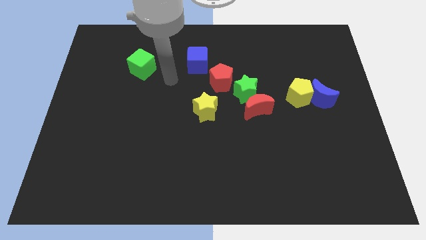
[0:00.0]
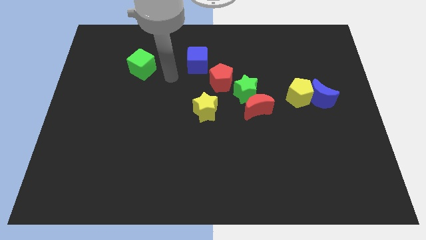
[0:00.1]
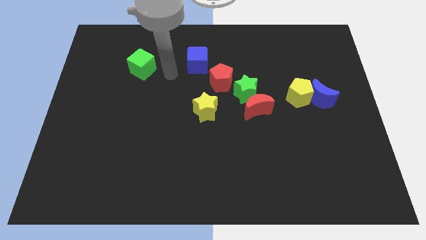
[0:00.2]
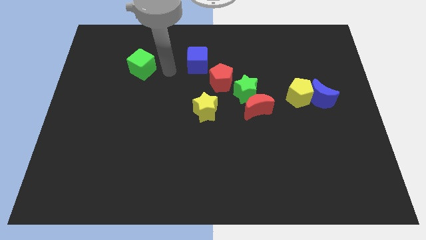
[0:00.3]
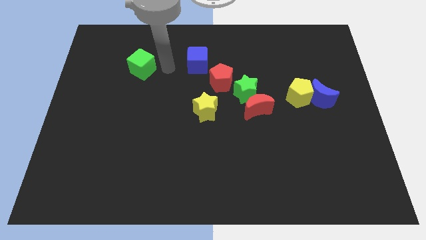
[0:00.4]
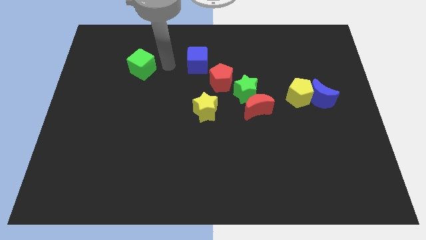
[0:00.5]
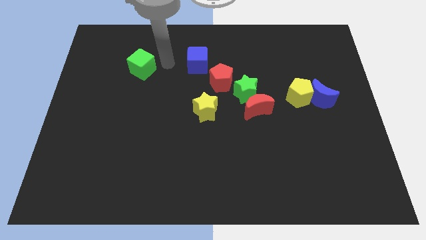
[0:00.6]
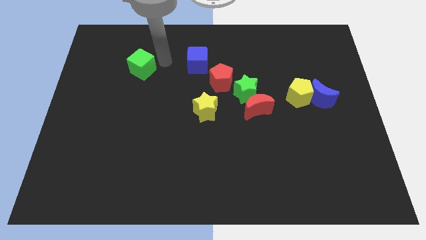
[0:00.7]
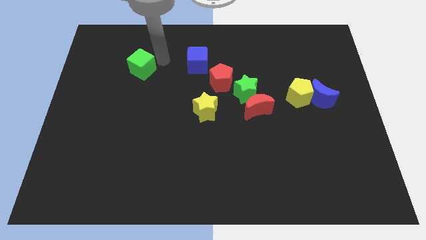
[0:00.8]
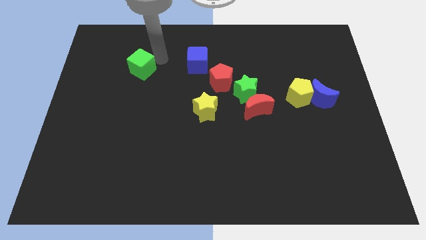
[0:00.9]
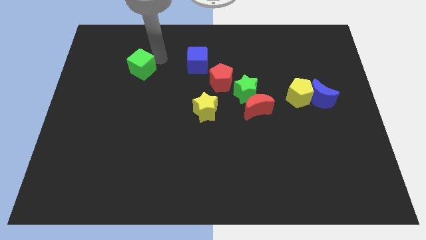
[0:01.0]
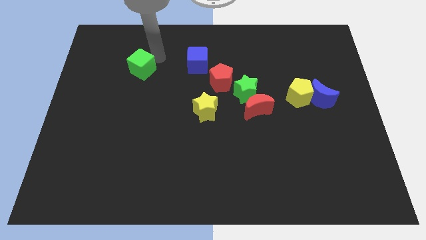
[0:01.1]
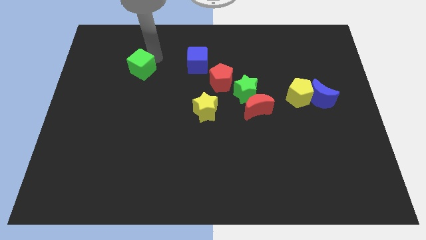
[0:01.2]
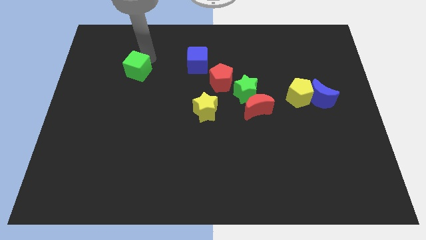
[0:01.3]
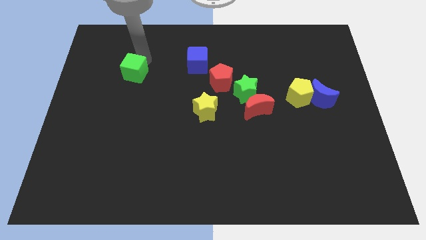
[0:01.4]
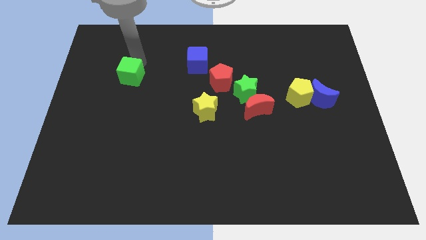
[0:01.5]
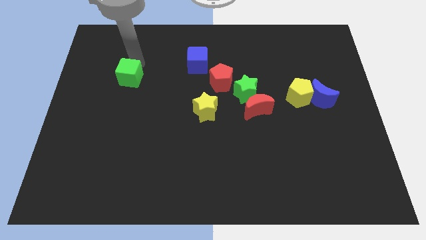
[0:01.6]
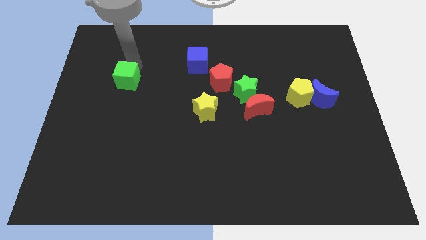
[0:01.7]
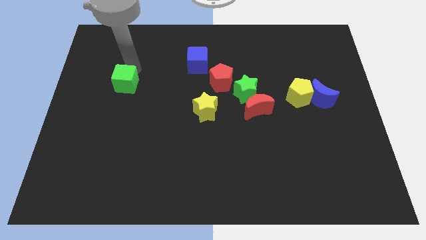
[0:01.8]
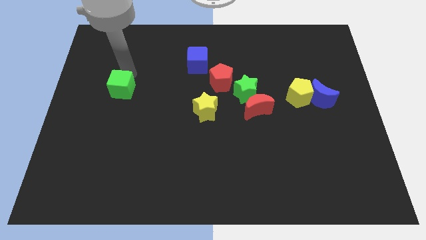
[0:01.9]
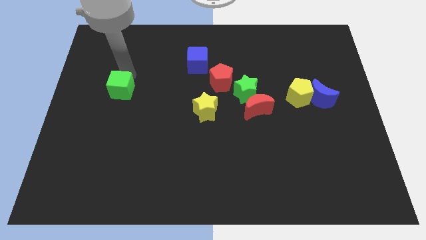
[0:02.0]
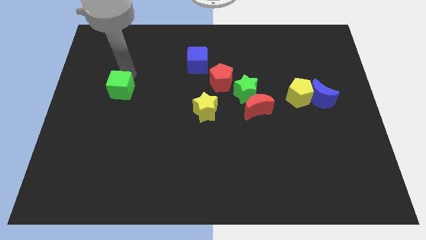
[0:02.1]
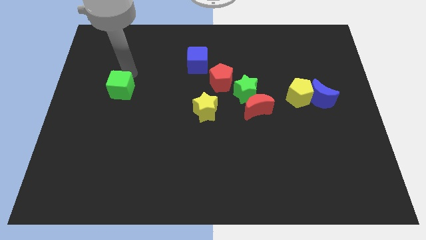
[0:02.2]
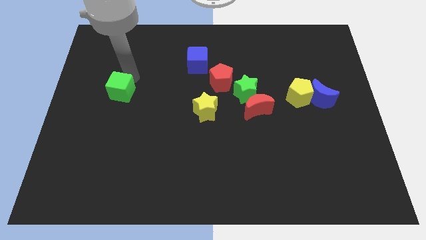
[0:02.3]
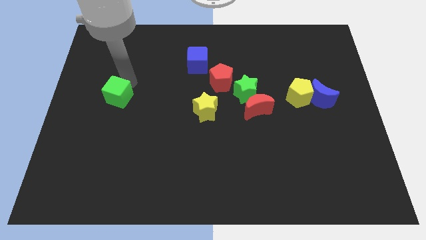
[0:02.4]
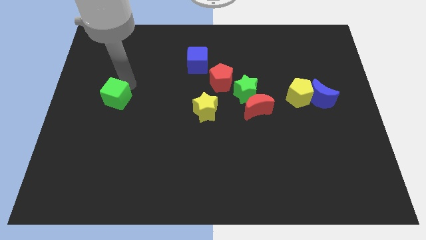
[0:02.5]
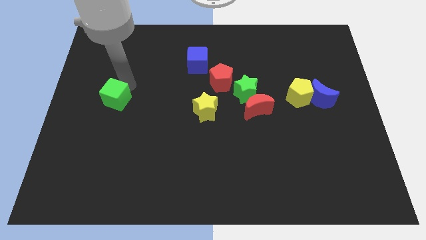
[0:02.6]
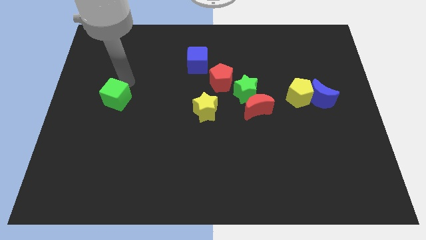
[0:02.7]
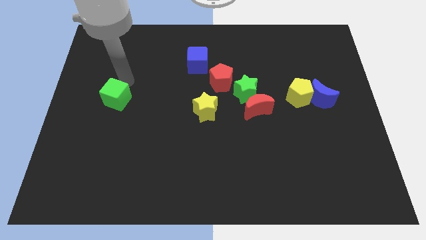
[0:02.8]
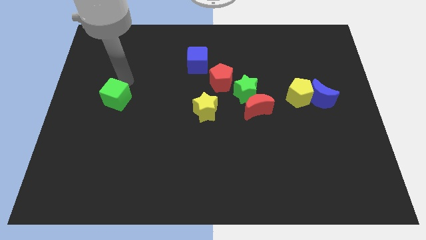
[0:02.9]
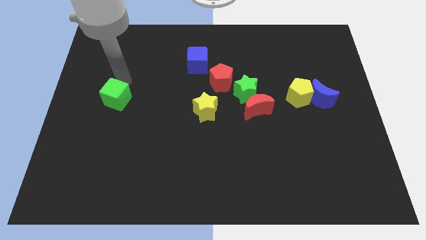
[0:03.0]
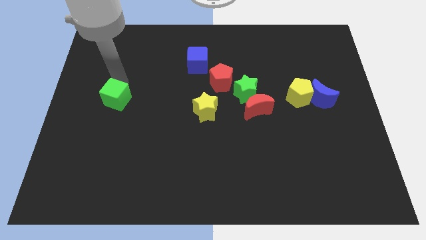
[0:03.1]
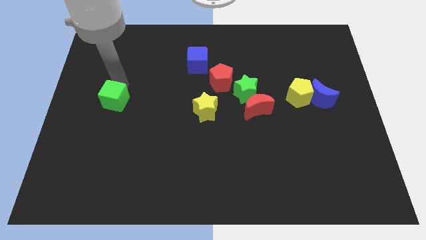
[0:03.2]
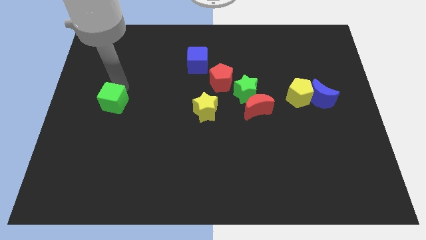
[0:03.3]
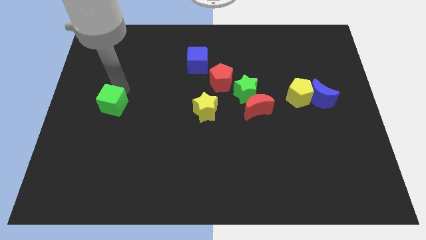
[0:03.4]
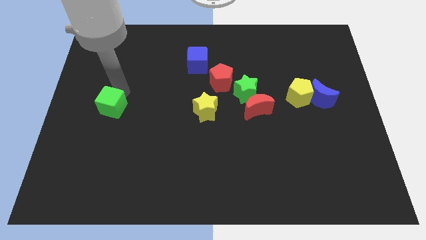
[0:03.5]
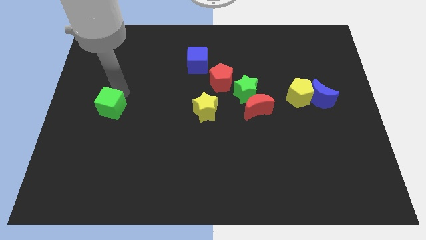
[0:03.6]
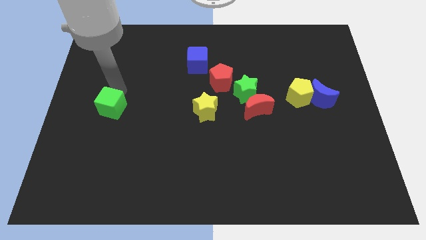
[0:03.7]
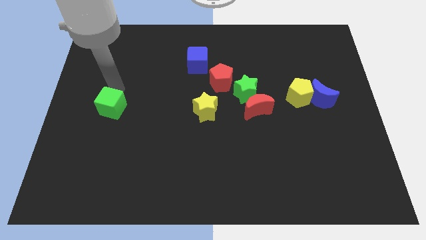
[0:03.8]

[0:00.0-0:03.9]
move the green cube to the left of the yellow star

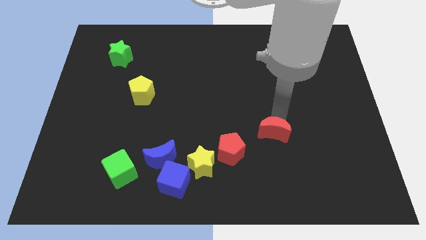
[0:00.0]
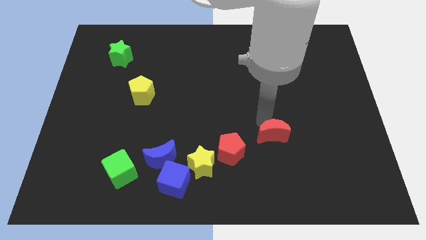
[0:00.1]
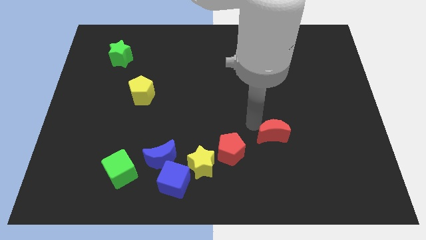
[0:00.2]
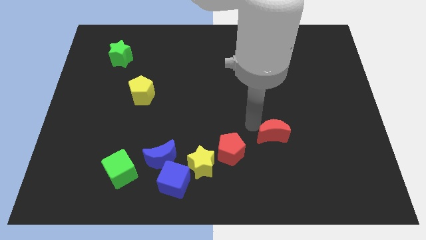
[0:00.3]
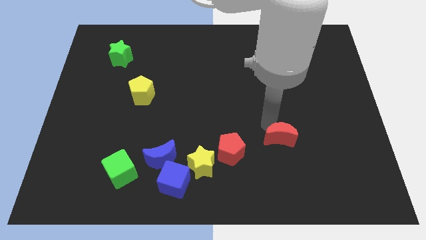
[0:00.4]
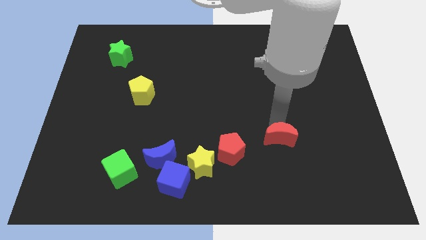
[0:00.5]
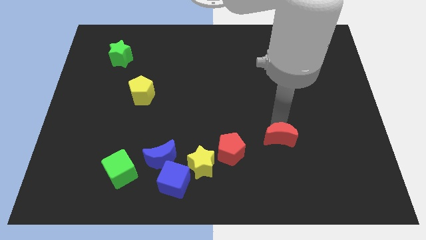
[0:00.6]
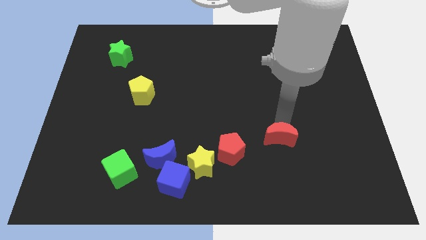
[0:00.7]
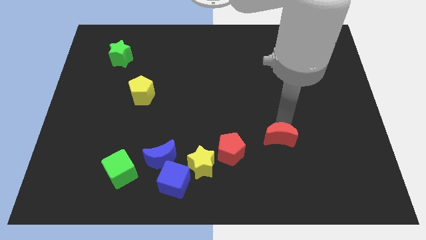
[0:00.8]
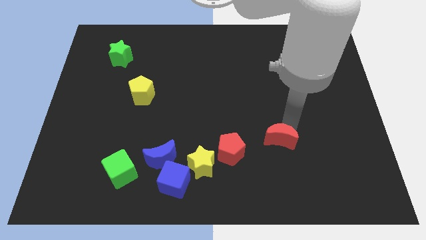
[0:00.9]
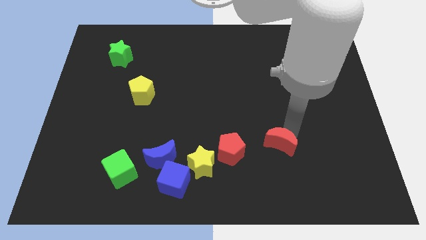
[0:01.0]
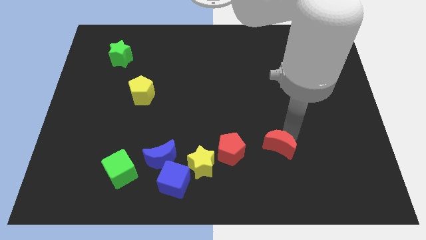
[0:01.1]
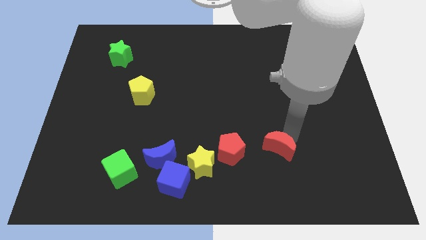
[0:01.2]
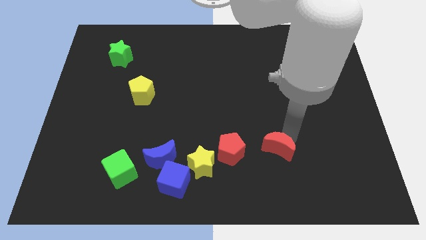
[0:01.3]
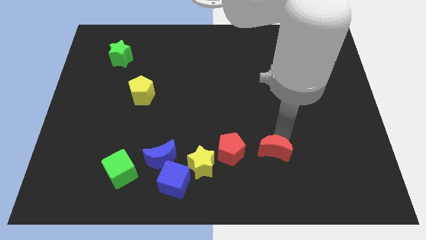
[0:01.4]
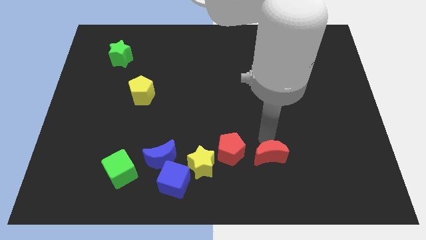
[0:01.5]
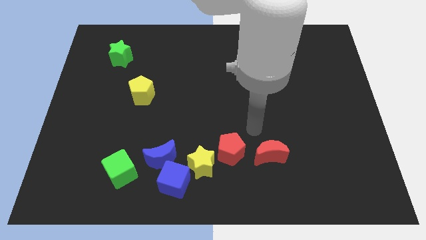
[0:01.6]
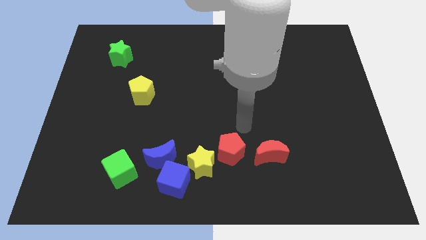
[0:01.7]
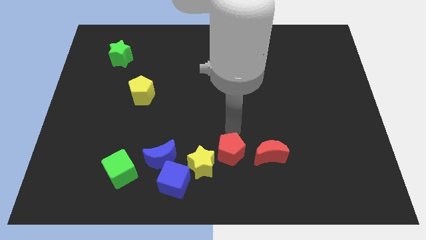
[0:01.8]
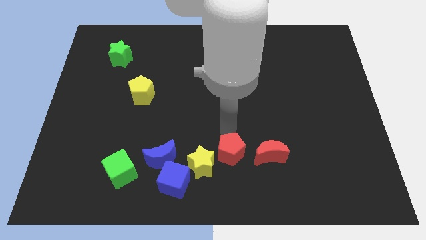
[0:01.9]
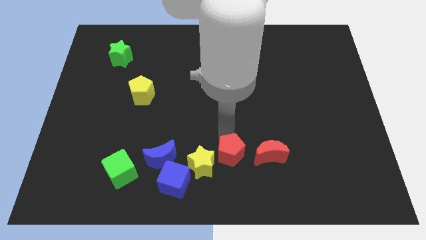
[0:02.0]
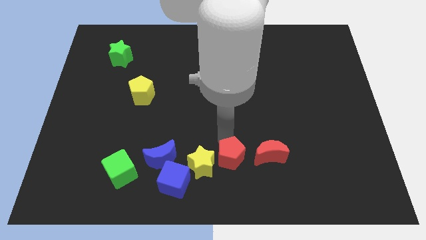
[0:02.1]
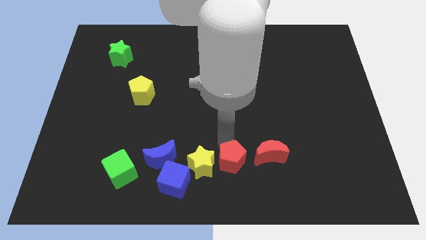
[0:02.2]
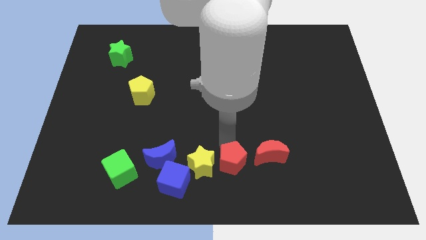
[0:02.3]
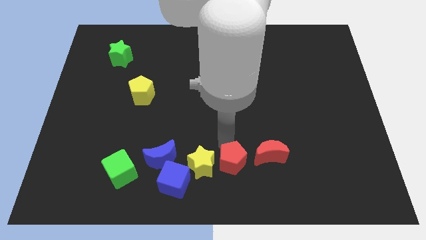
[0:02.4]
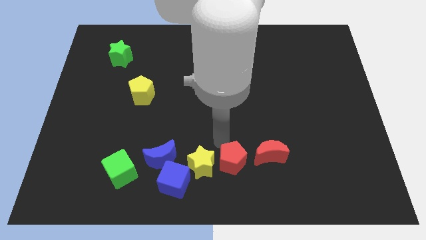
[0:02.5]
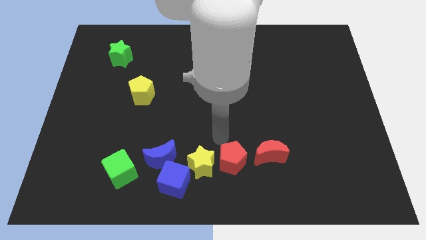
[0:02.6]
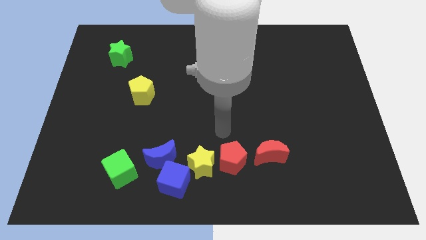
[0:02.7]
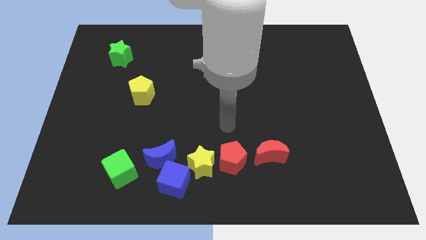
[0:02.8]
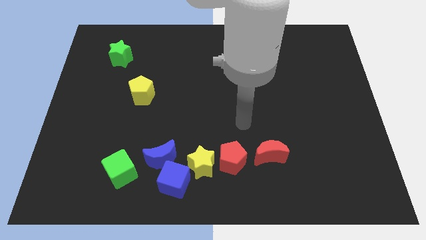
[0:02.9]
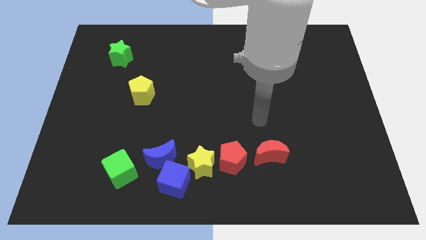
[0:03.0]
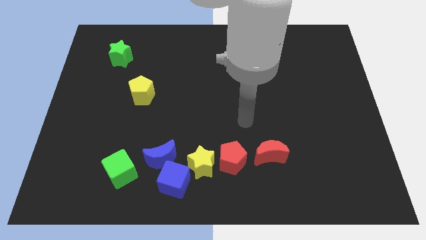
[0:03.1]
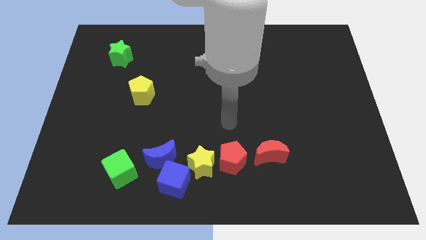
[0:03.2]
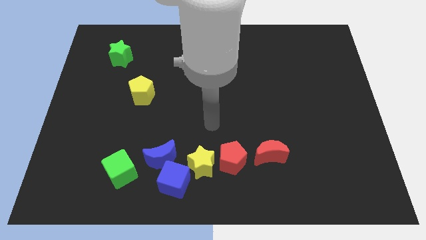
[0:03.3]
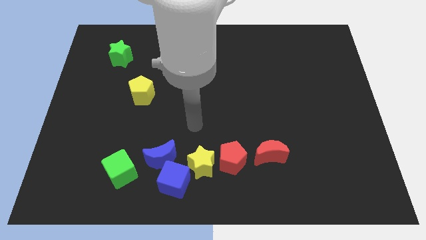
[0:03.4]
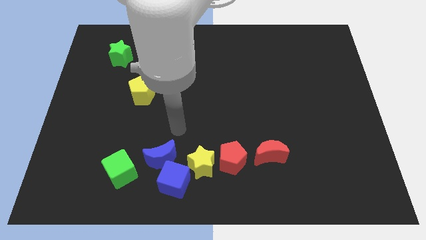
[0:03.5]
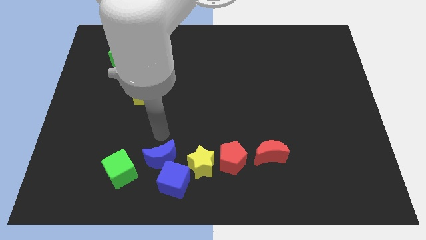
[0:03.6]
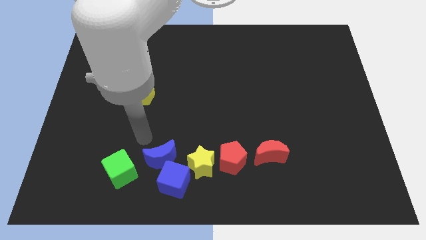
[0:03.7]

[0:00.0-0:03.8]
push red pentagon between yellow star and red moon

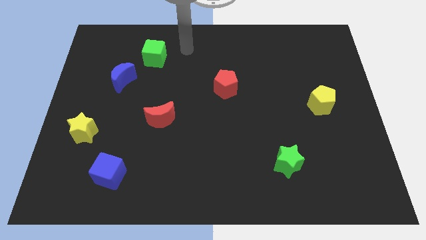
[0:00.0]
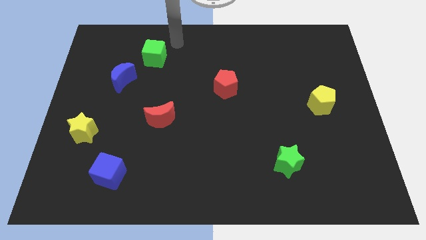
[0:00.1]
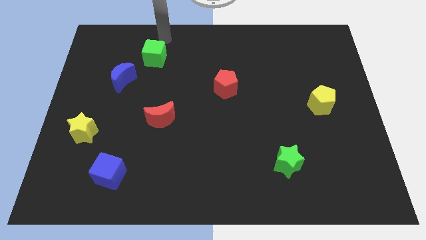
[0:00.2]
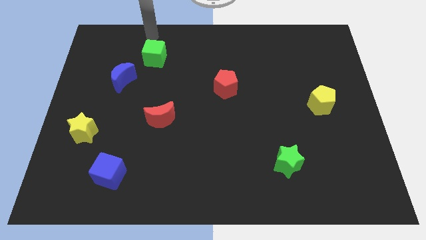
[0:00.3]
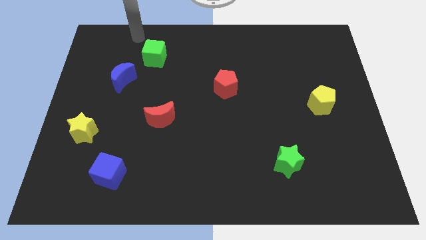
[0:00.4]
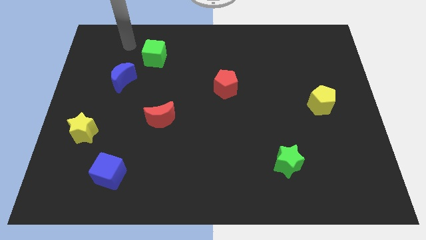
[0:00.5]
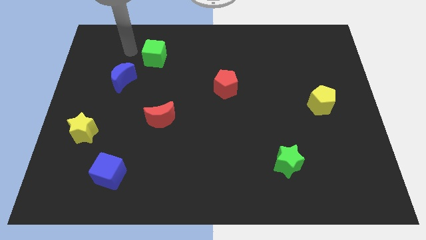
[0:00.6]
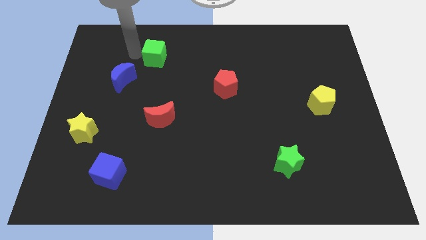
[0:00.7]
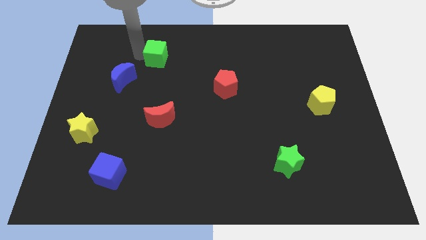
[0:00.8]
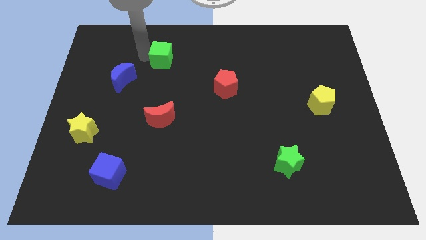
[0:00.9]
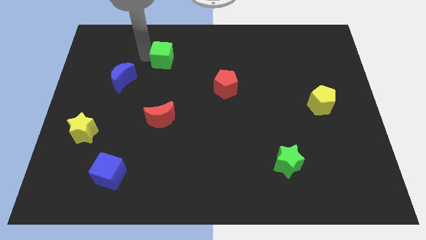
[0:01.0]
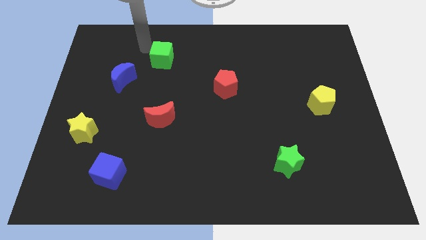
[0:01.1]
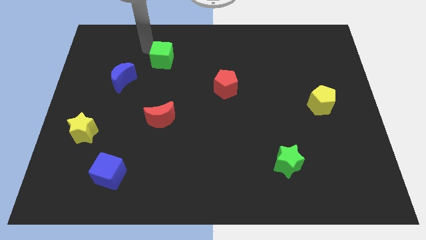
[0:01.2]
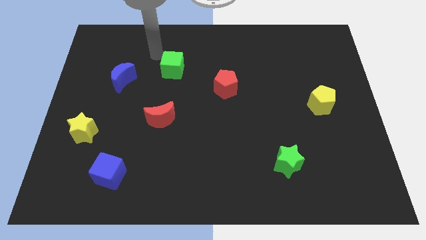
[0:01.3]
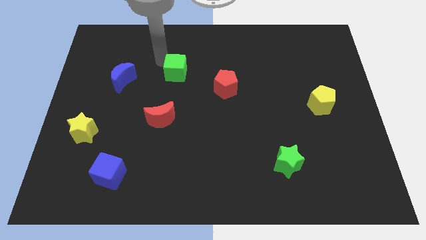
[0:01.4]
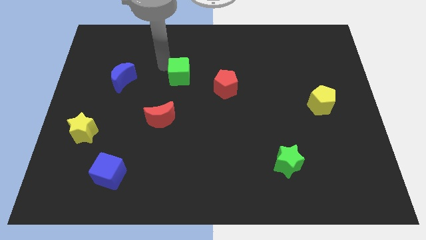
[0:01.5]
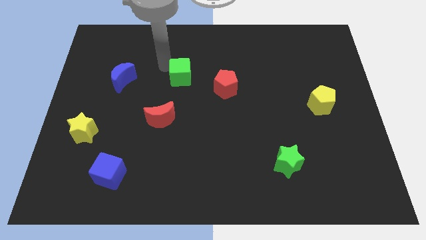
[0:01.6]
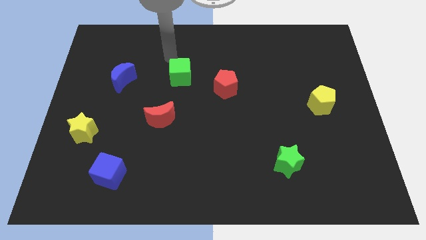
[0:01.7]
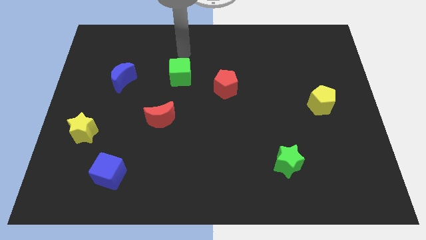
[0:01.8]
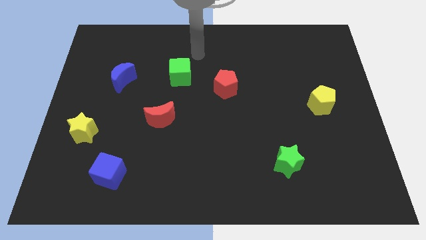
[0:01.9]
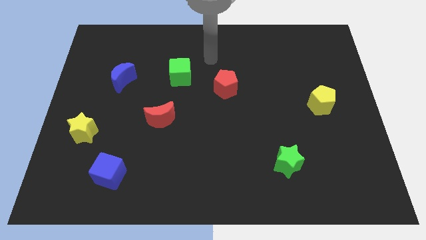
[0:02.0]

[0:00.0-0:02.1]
place the green cube horizontally in between the blue moon and the red pentagon
